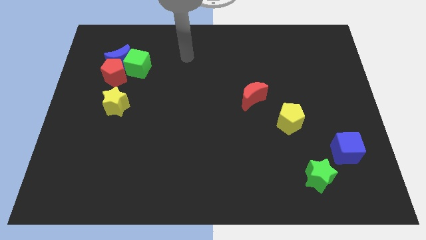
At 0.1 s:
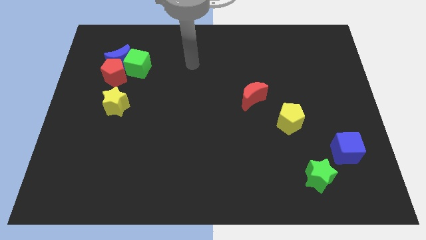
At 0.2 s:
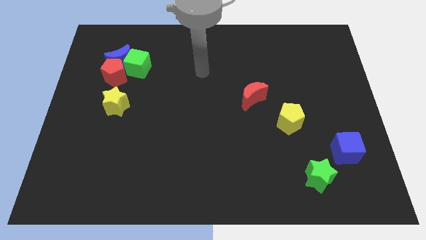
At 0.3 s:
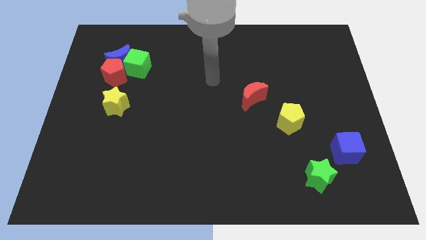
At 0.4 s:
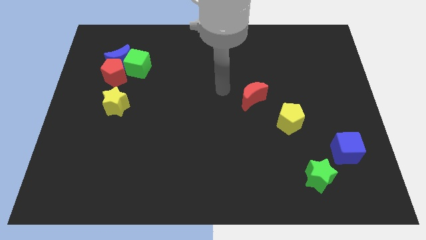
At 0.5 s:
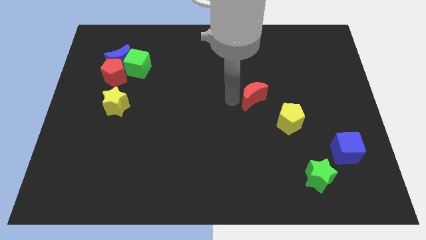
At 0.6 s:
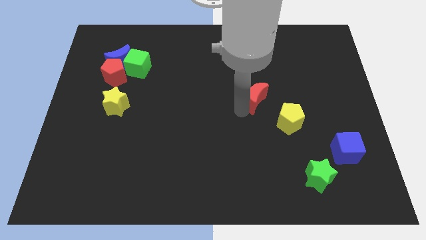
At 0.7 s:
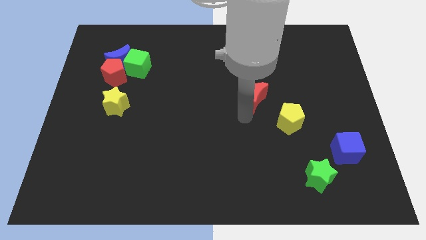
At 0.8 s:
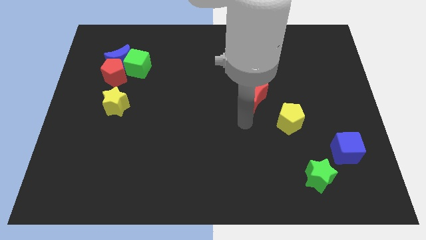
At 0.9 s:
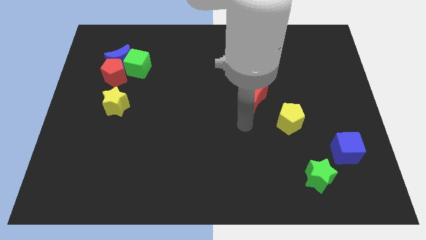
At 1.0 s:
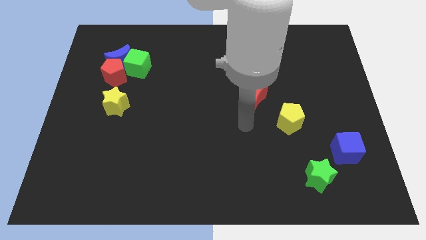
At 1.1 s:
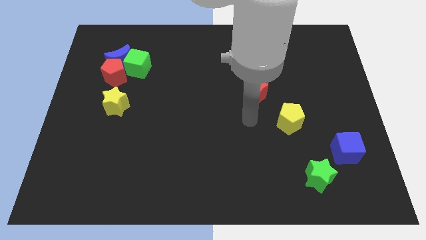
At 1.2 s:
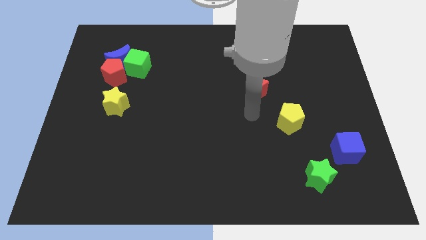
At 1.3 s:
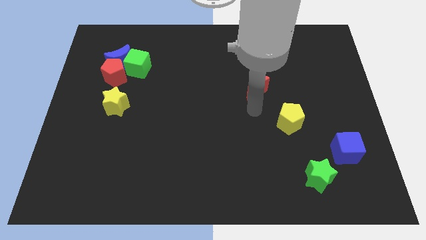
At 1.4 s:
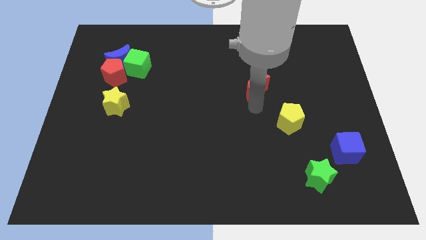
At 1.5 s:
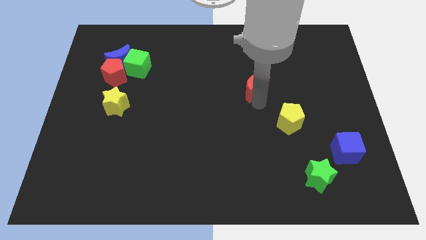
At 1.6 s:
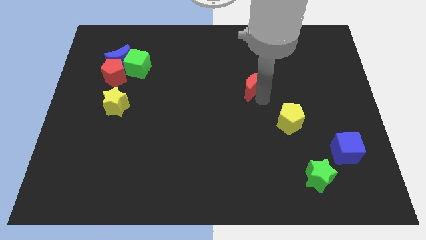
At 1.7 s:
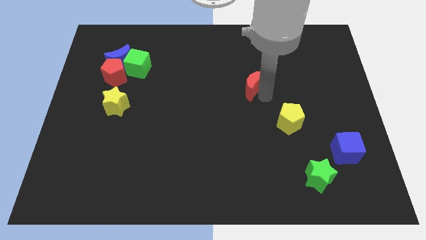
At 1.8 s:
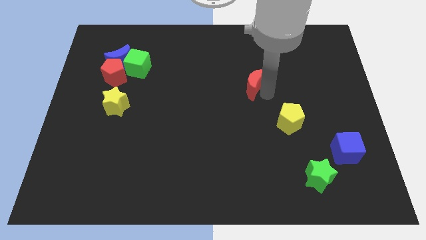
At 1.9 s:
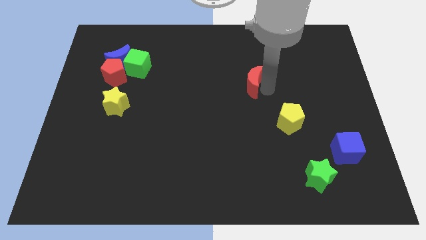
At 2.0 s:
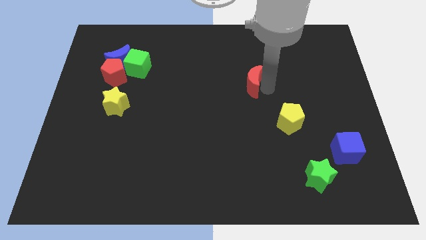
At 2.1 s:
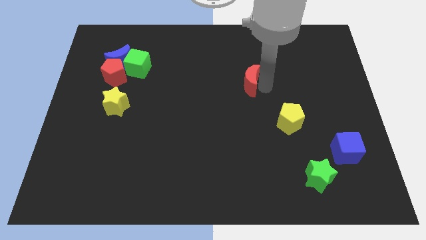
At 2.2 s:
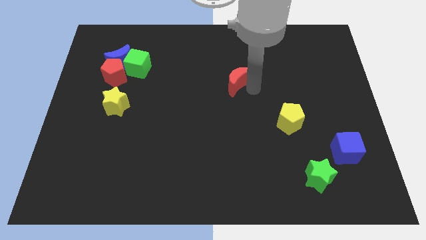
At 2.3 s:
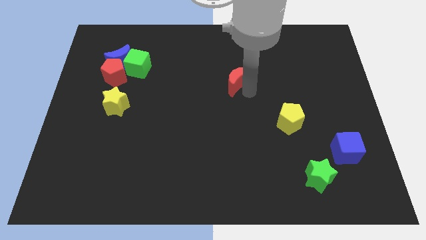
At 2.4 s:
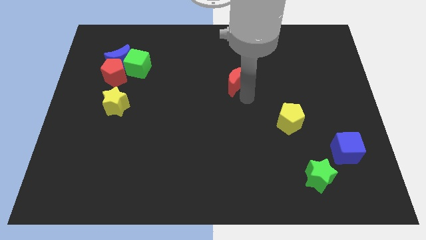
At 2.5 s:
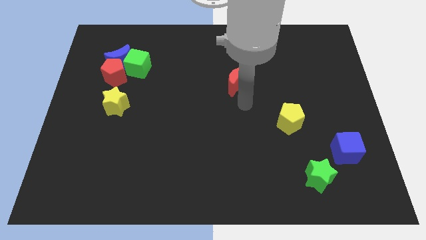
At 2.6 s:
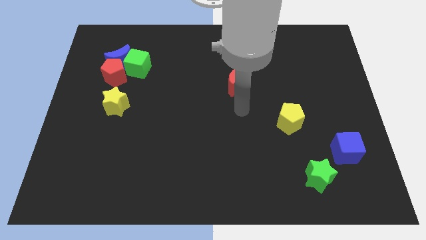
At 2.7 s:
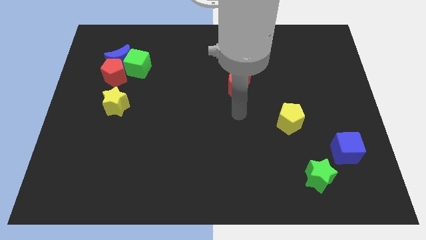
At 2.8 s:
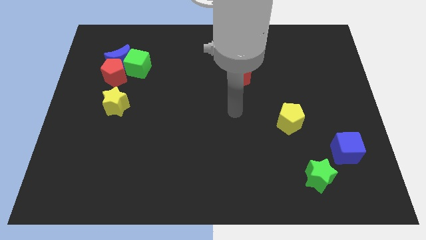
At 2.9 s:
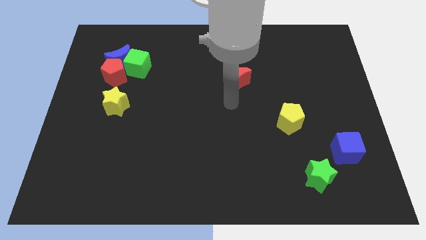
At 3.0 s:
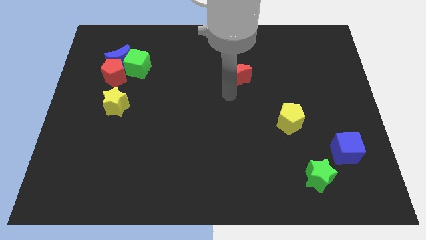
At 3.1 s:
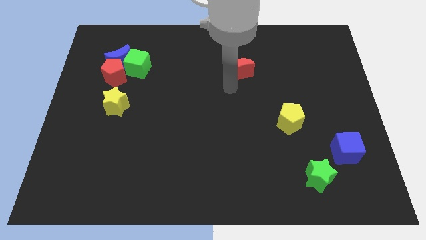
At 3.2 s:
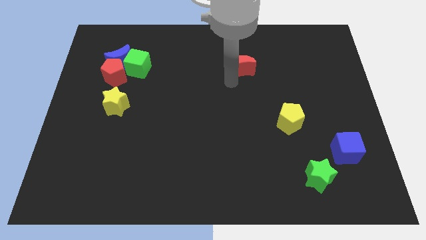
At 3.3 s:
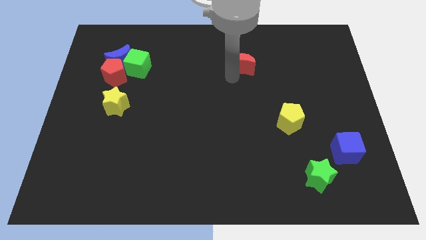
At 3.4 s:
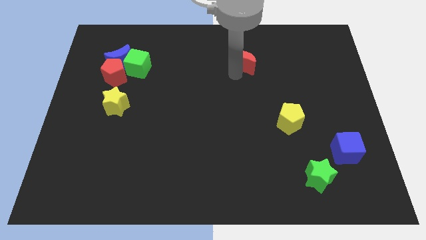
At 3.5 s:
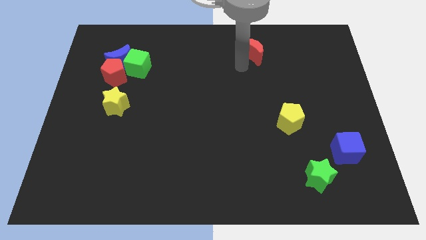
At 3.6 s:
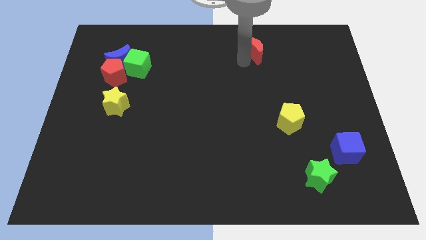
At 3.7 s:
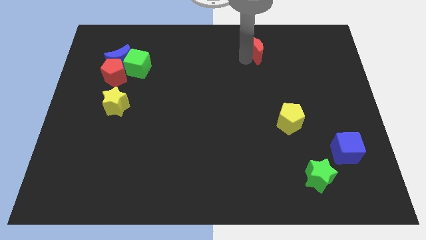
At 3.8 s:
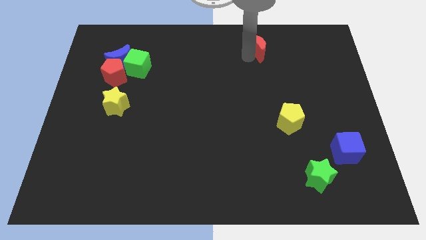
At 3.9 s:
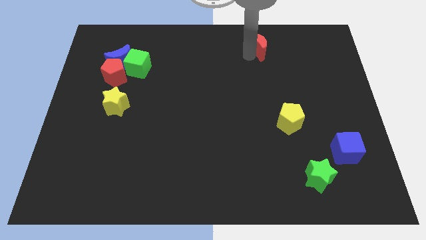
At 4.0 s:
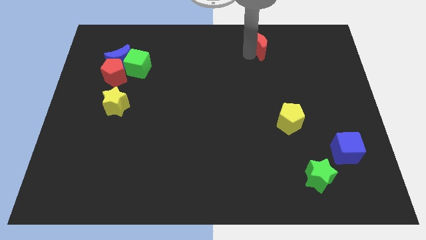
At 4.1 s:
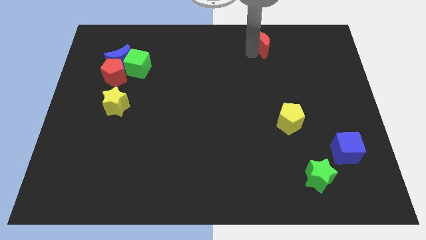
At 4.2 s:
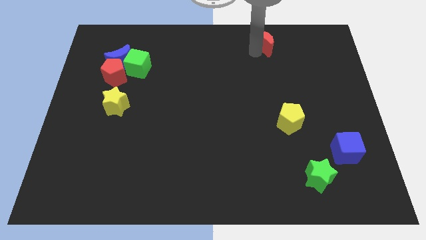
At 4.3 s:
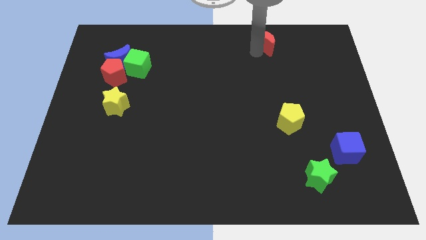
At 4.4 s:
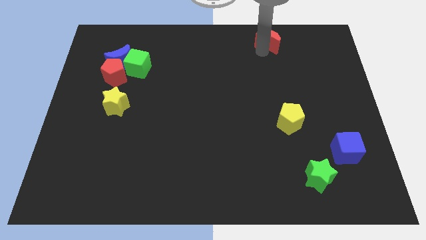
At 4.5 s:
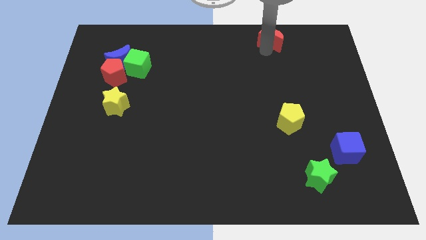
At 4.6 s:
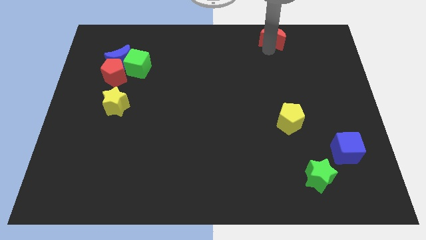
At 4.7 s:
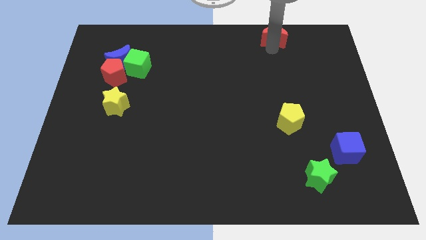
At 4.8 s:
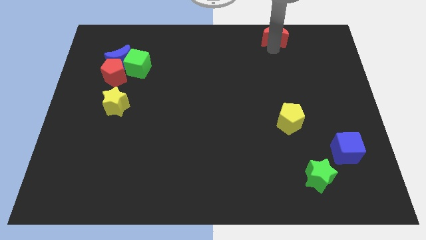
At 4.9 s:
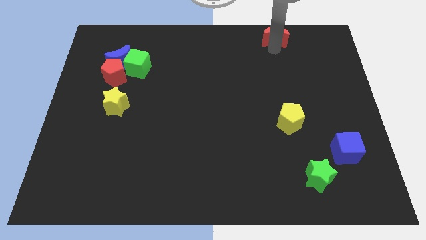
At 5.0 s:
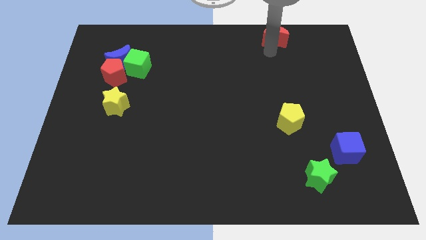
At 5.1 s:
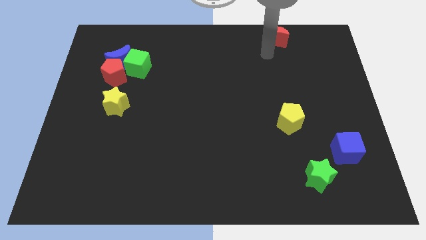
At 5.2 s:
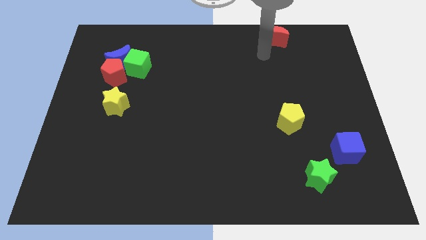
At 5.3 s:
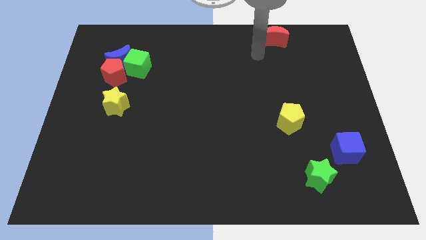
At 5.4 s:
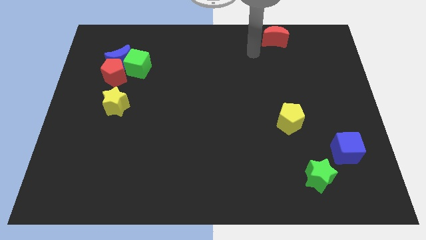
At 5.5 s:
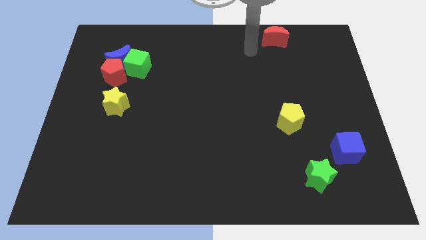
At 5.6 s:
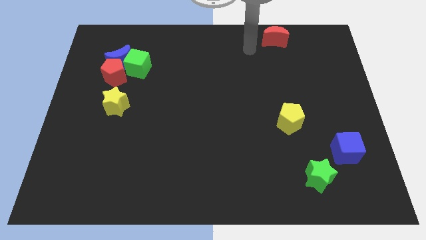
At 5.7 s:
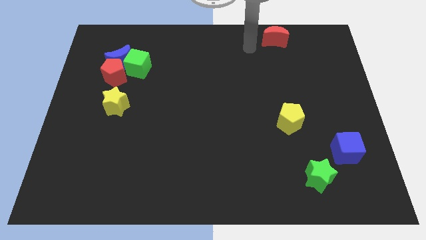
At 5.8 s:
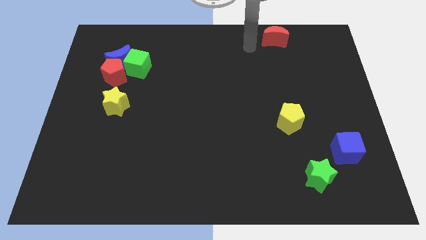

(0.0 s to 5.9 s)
place the red crescent at the top right side

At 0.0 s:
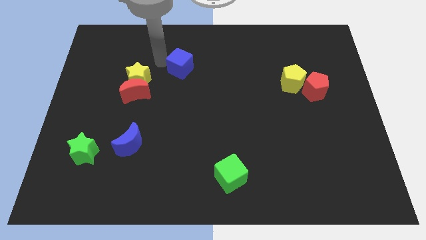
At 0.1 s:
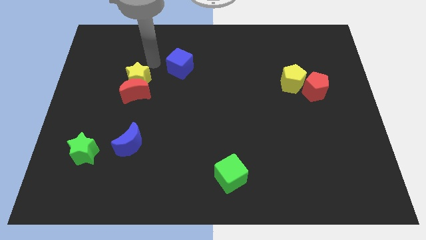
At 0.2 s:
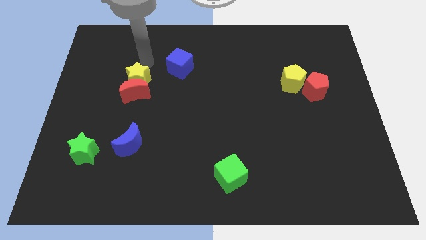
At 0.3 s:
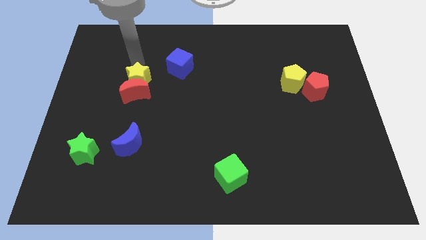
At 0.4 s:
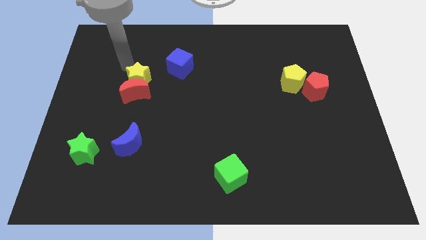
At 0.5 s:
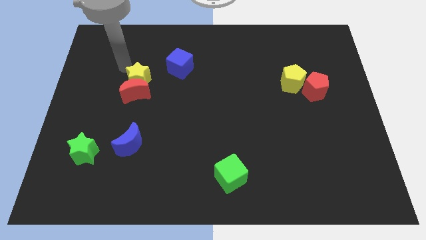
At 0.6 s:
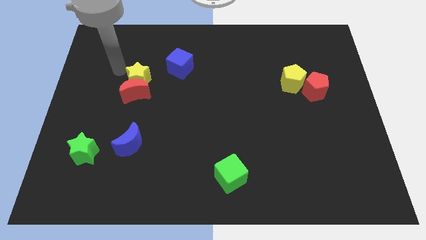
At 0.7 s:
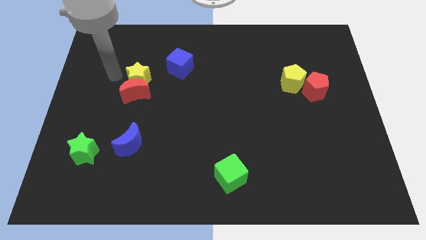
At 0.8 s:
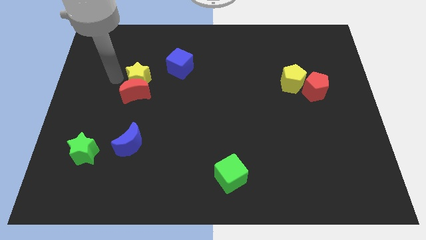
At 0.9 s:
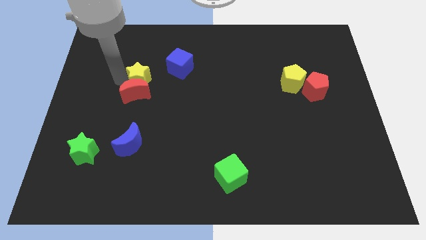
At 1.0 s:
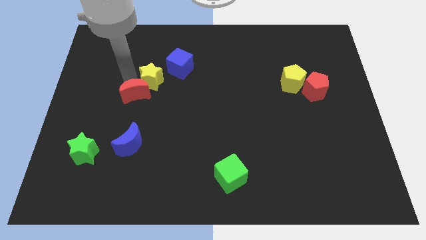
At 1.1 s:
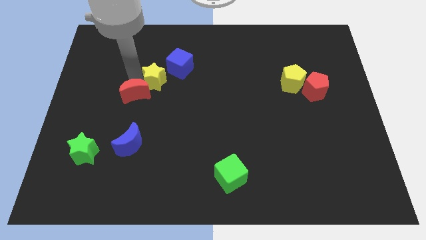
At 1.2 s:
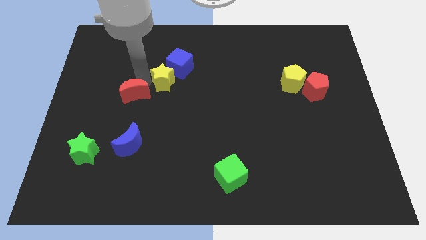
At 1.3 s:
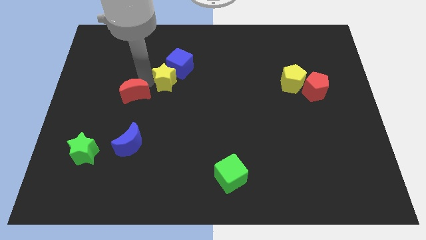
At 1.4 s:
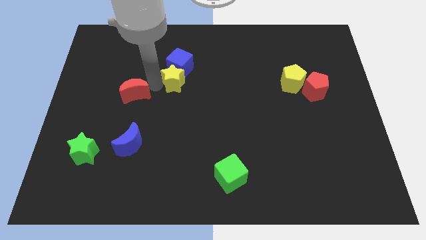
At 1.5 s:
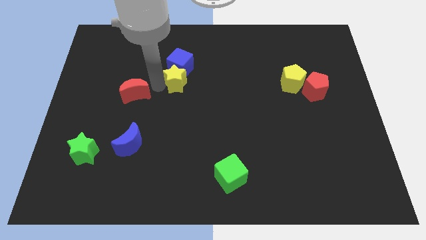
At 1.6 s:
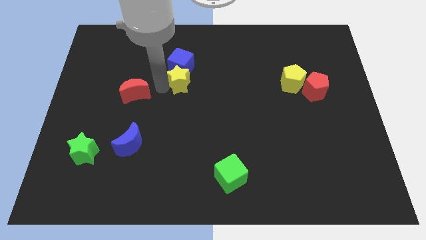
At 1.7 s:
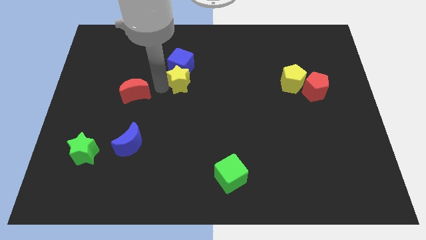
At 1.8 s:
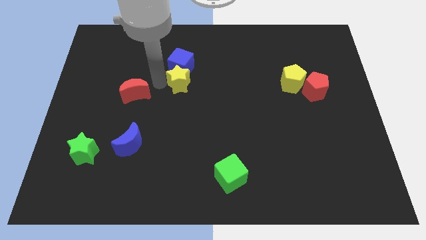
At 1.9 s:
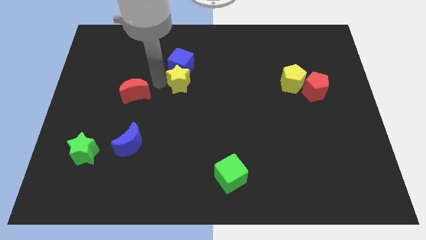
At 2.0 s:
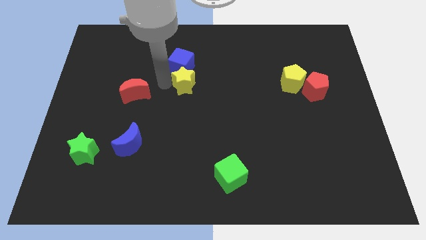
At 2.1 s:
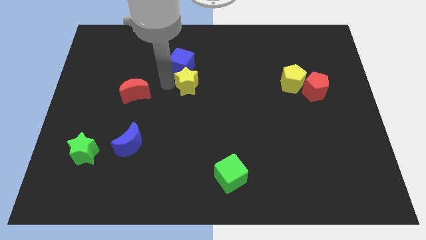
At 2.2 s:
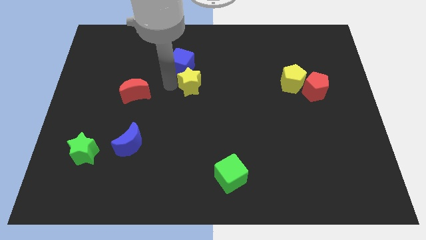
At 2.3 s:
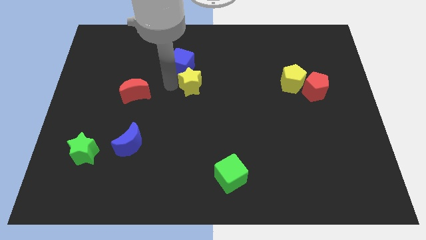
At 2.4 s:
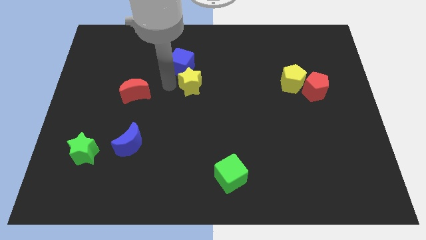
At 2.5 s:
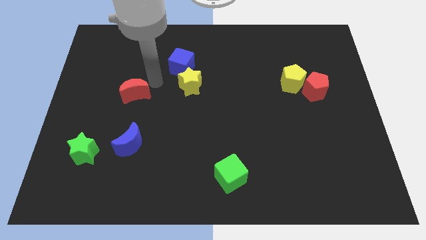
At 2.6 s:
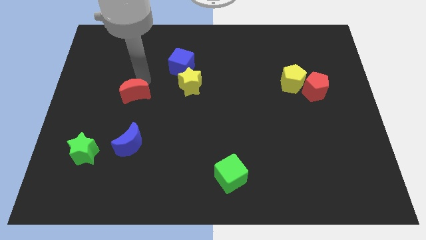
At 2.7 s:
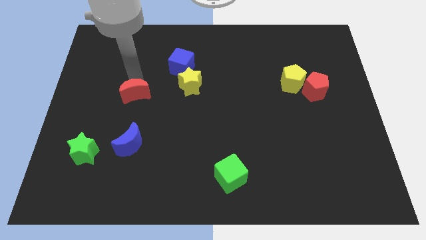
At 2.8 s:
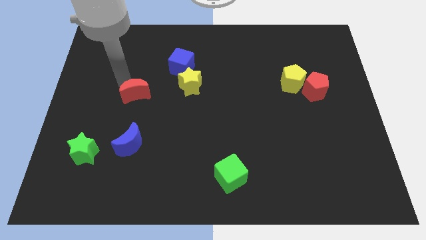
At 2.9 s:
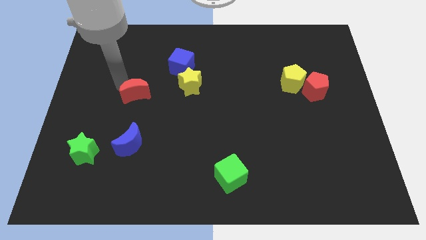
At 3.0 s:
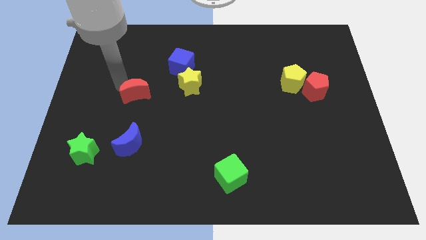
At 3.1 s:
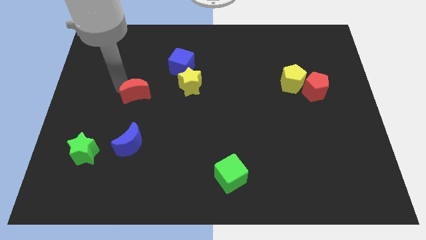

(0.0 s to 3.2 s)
place the yellow star to the bottom of the blue cube
